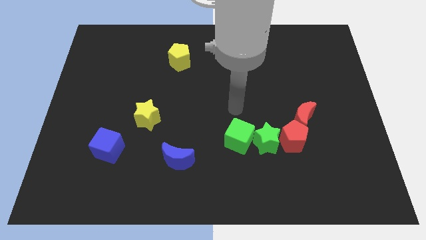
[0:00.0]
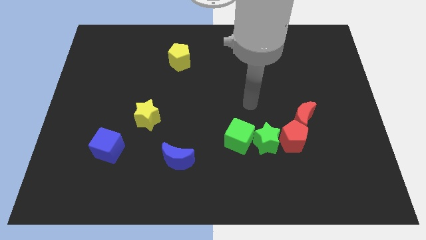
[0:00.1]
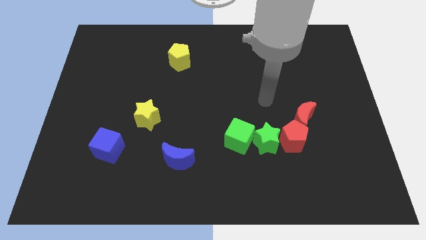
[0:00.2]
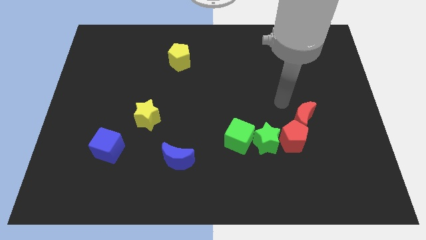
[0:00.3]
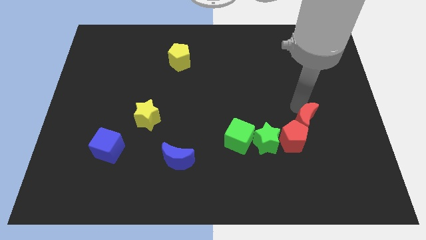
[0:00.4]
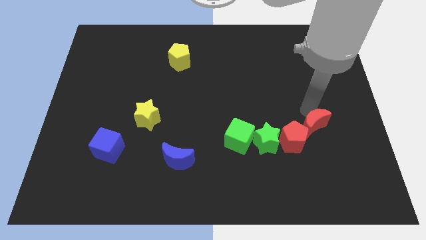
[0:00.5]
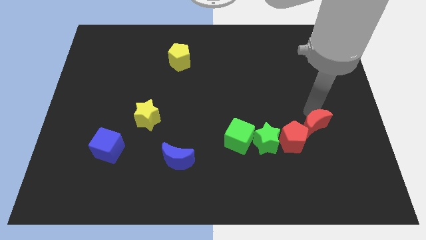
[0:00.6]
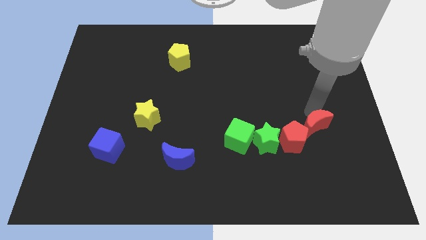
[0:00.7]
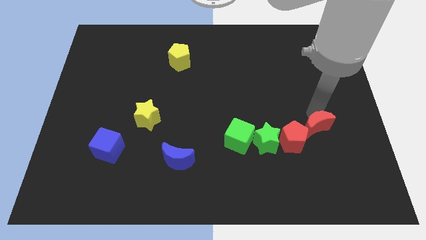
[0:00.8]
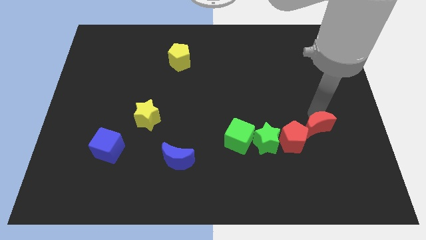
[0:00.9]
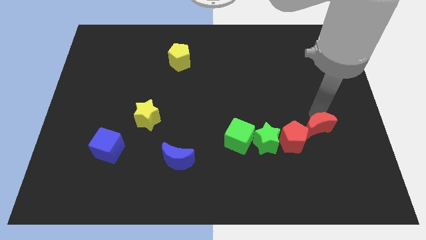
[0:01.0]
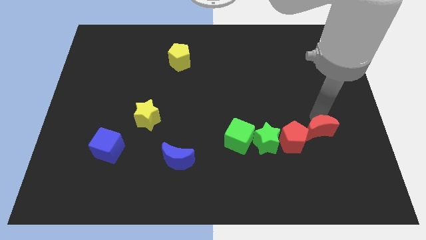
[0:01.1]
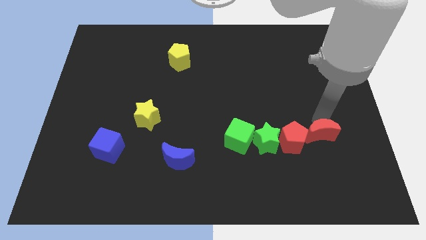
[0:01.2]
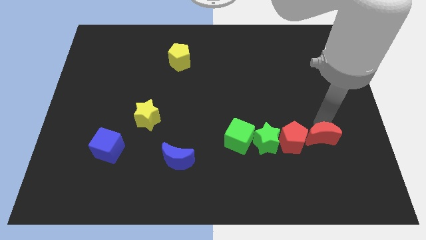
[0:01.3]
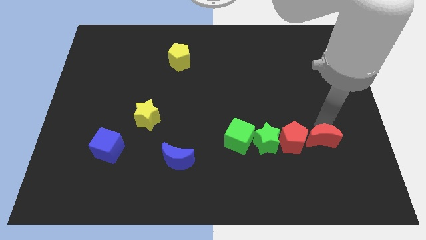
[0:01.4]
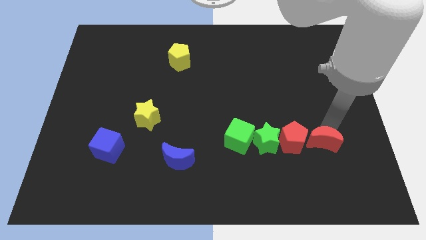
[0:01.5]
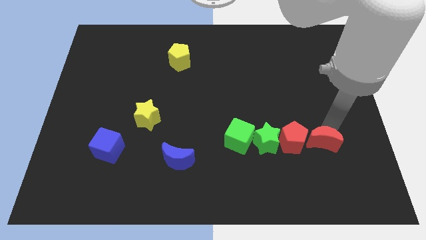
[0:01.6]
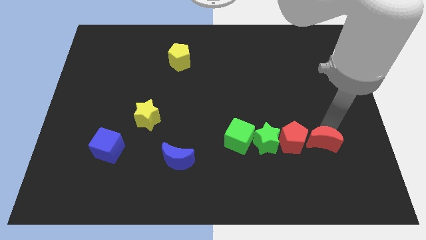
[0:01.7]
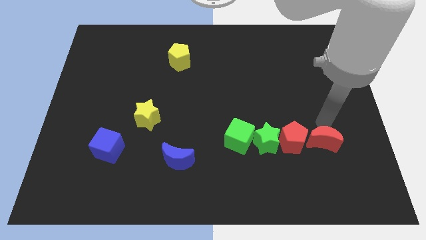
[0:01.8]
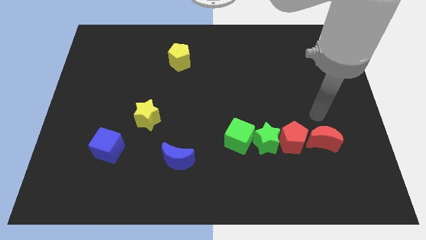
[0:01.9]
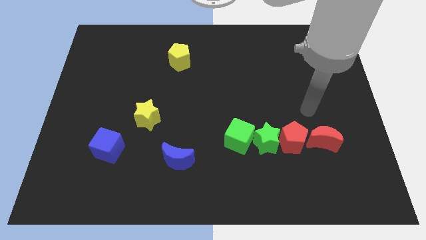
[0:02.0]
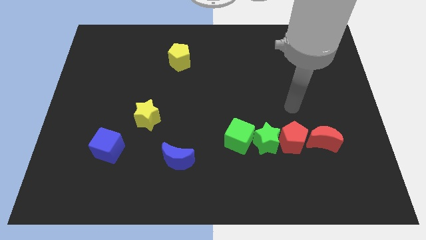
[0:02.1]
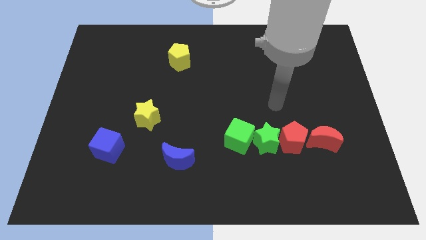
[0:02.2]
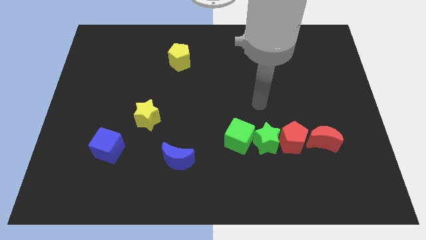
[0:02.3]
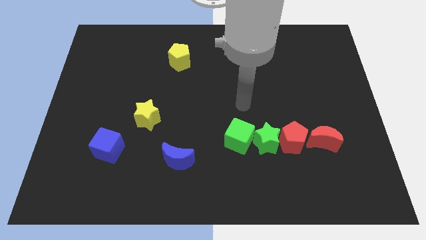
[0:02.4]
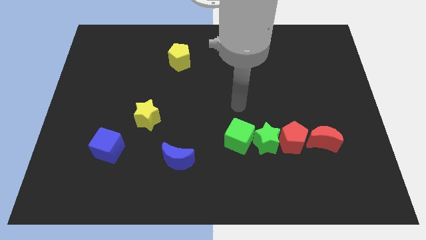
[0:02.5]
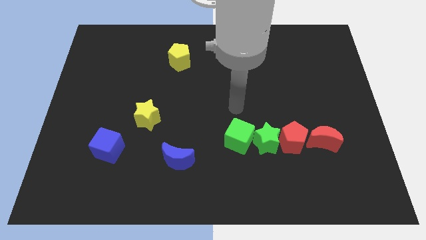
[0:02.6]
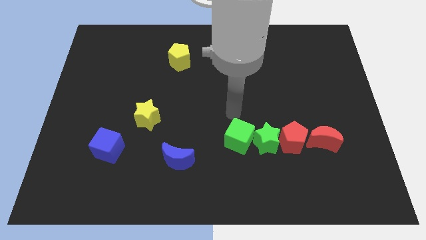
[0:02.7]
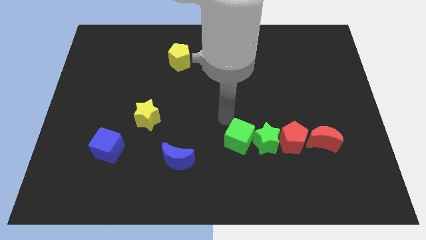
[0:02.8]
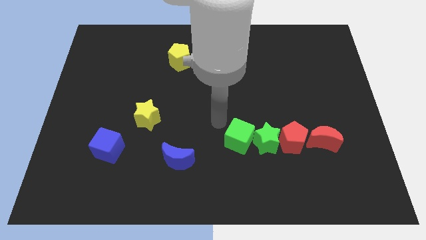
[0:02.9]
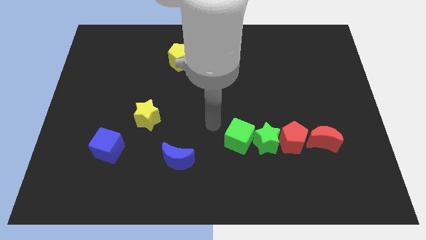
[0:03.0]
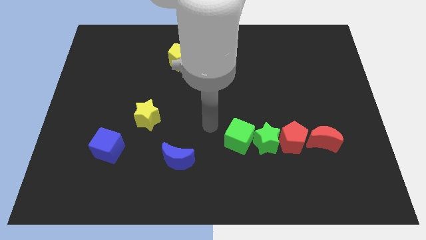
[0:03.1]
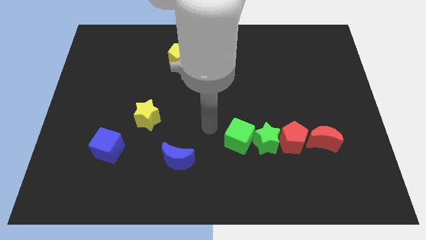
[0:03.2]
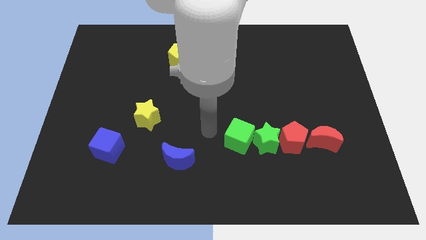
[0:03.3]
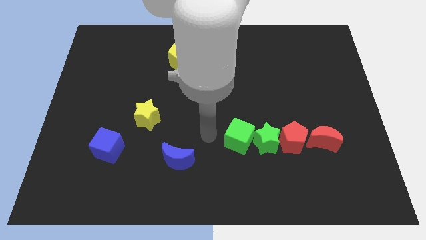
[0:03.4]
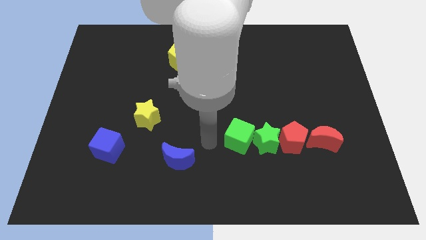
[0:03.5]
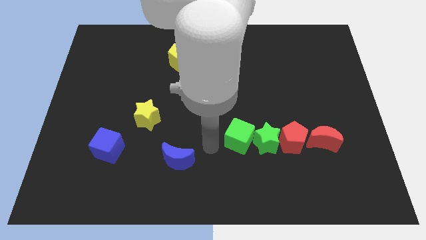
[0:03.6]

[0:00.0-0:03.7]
place the red crescent right to the red pentagon to fom a horizontal line

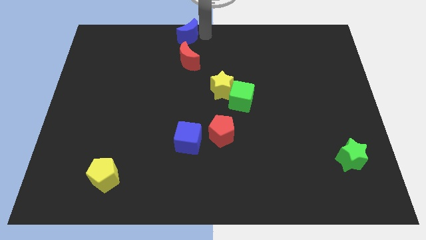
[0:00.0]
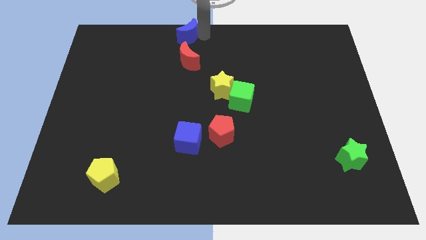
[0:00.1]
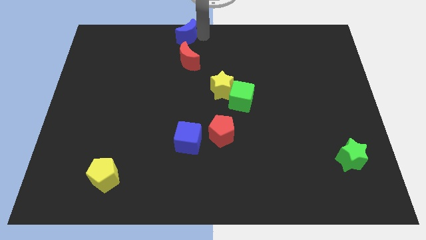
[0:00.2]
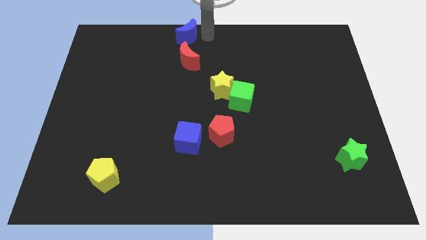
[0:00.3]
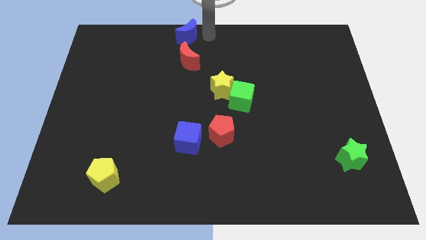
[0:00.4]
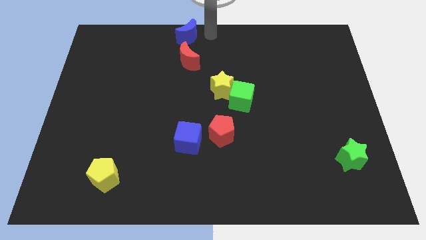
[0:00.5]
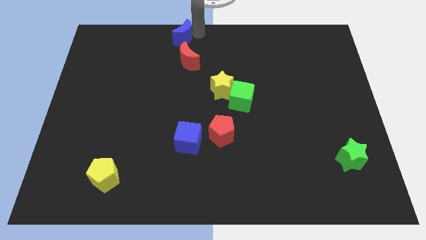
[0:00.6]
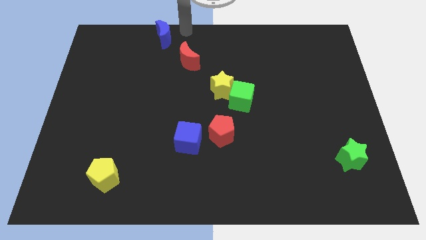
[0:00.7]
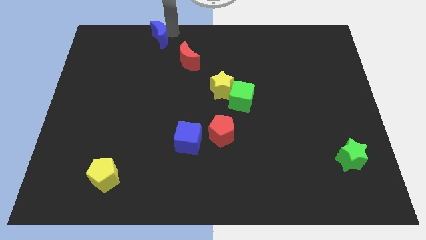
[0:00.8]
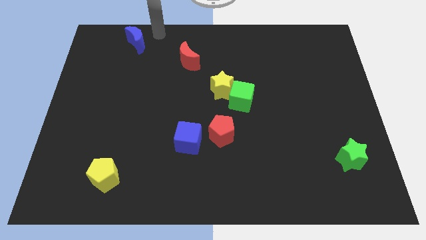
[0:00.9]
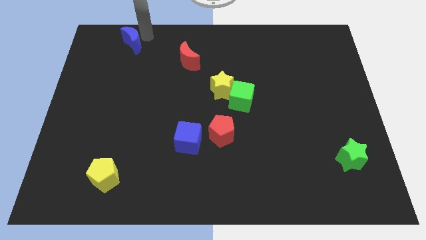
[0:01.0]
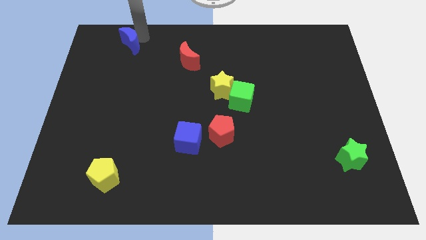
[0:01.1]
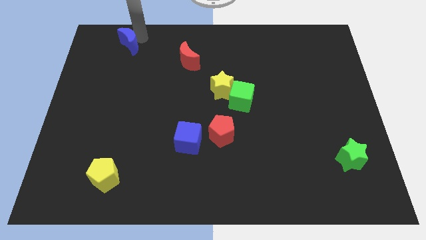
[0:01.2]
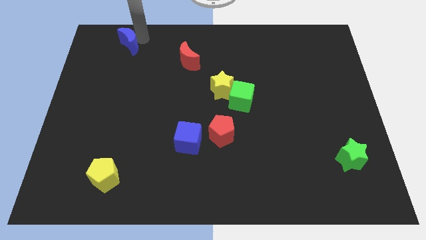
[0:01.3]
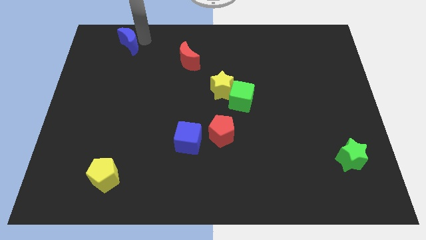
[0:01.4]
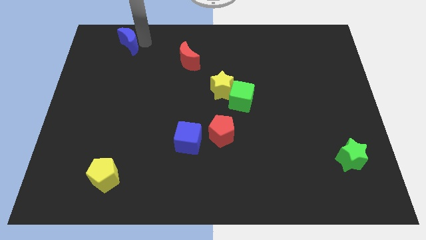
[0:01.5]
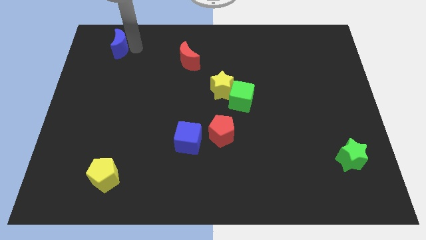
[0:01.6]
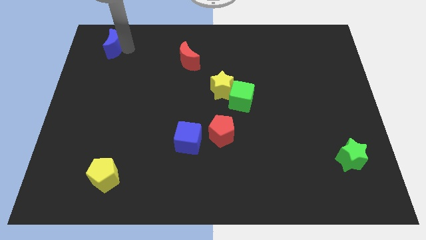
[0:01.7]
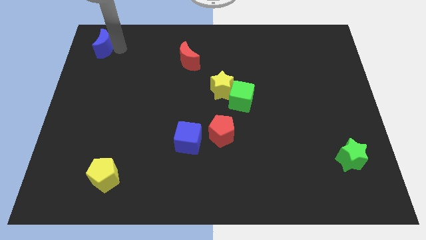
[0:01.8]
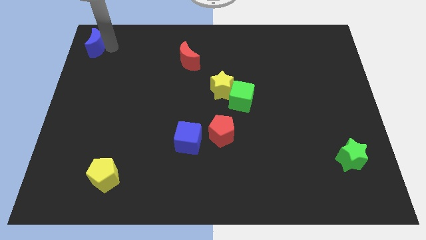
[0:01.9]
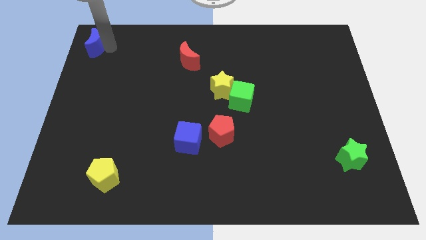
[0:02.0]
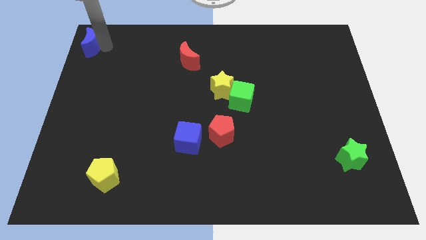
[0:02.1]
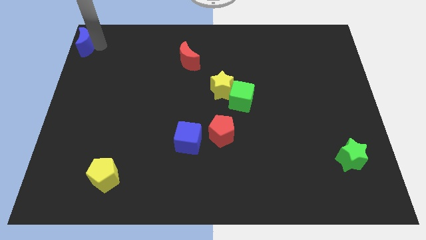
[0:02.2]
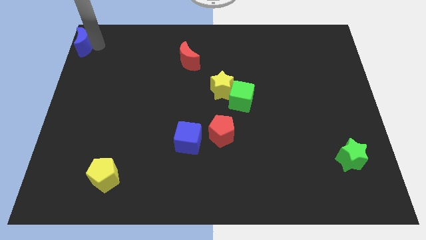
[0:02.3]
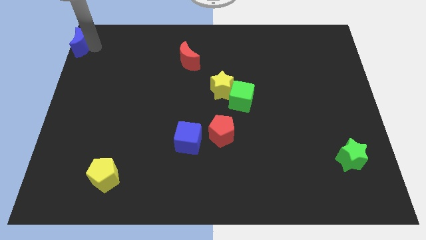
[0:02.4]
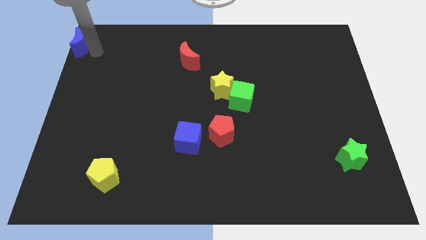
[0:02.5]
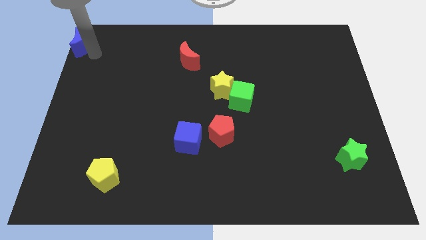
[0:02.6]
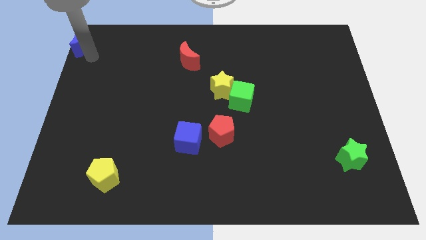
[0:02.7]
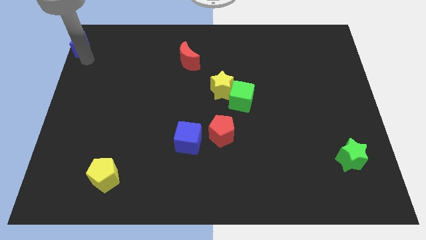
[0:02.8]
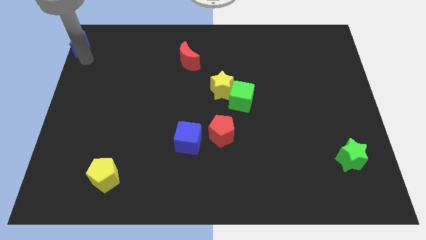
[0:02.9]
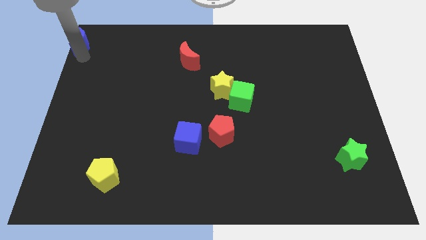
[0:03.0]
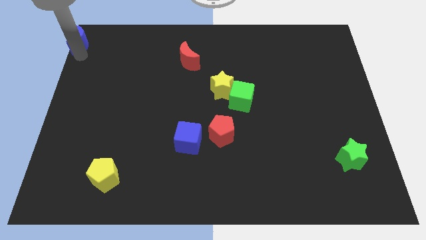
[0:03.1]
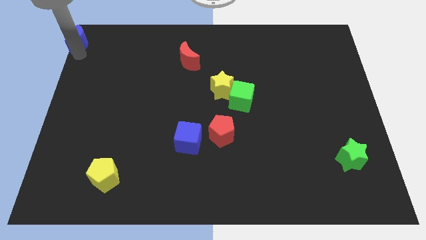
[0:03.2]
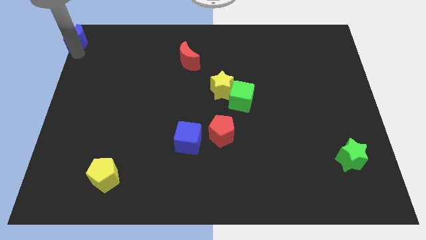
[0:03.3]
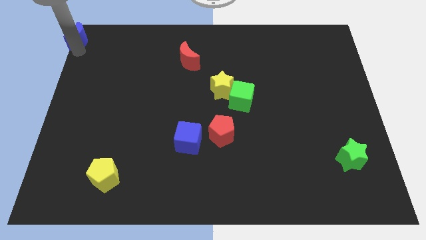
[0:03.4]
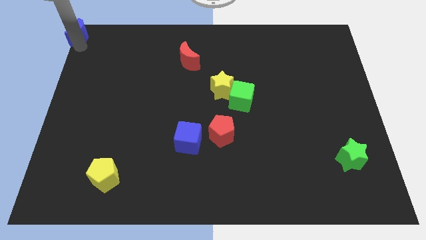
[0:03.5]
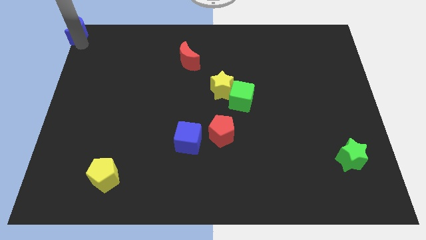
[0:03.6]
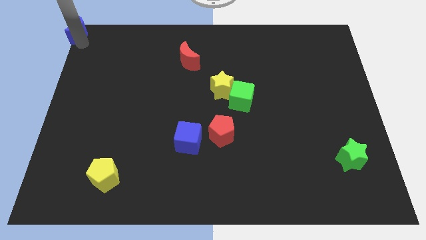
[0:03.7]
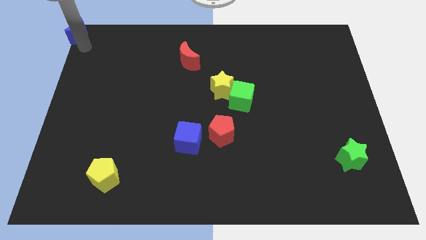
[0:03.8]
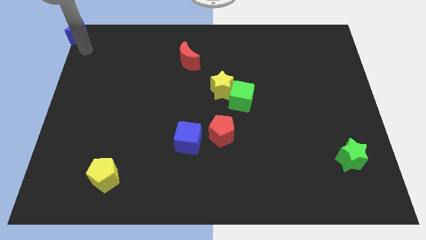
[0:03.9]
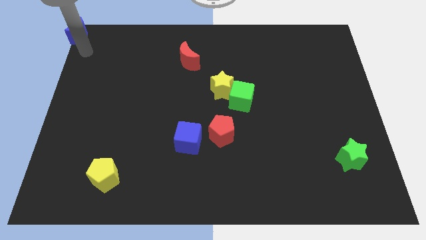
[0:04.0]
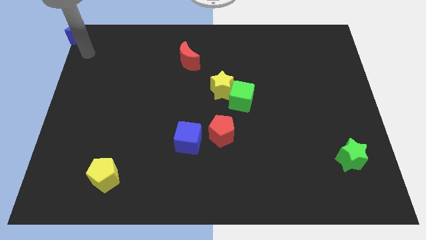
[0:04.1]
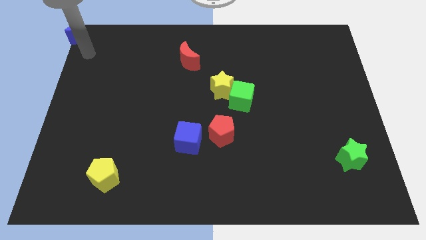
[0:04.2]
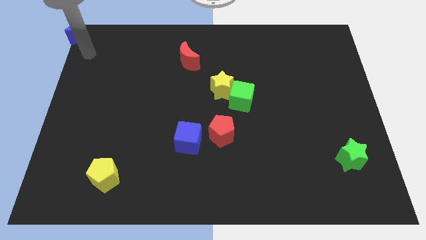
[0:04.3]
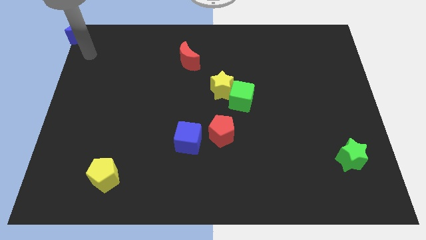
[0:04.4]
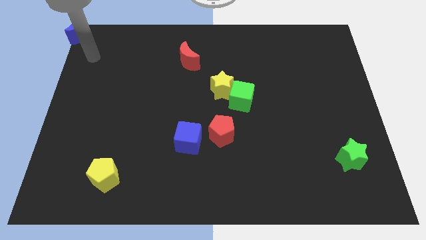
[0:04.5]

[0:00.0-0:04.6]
move the blue moon to the top left corner

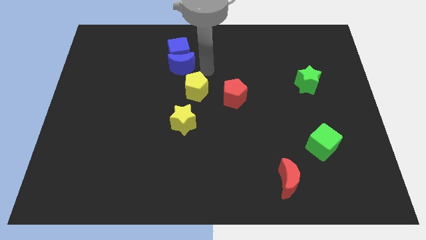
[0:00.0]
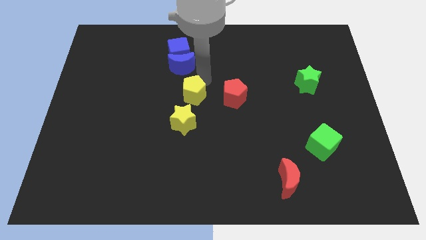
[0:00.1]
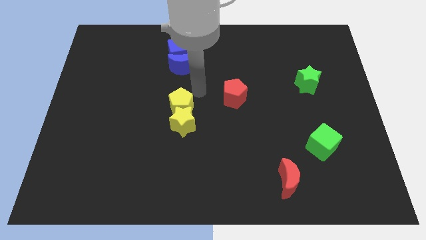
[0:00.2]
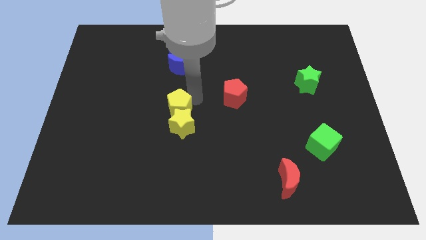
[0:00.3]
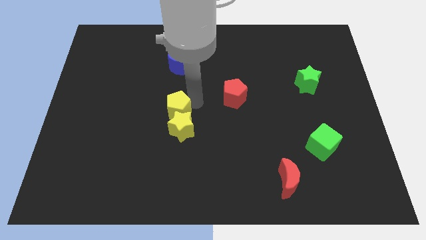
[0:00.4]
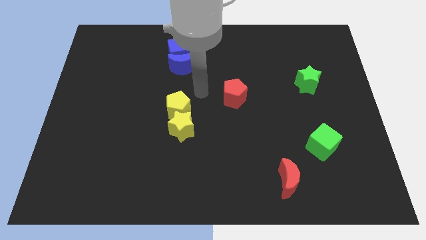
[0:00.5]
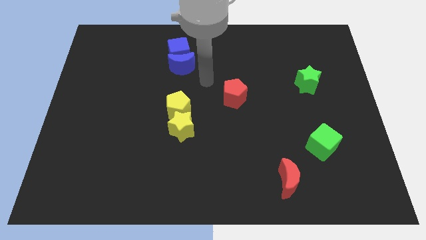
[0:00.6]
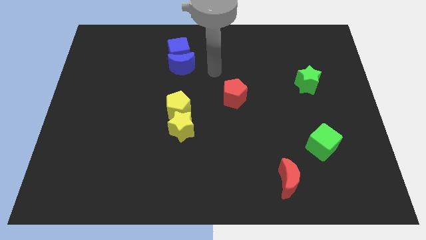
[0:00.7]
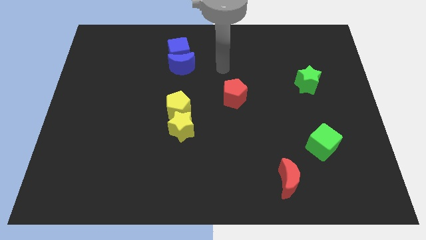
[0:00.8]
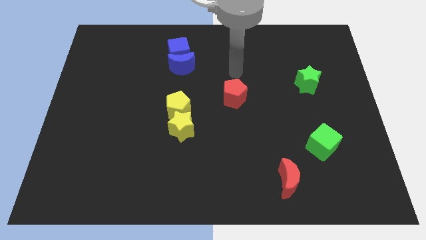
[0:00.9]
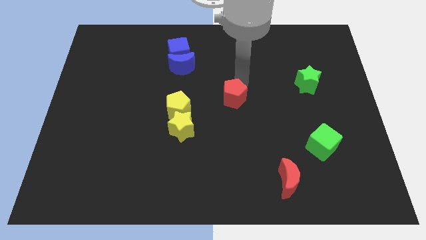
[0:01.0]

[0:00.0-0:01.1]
move the yellow pentagon above the yellow star
